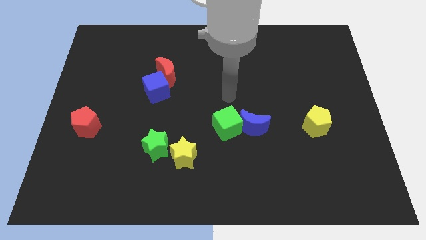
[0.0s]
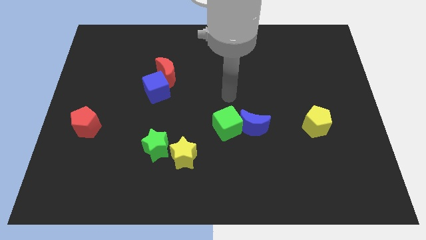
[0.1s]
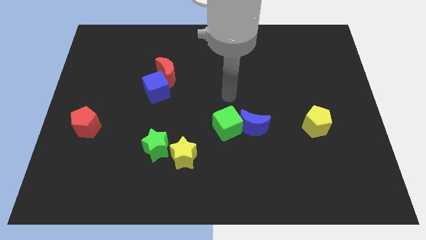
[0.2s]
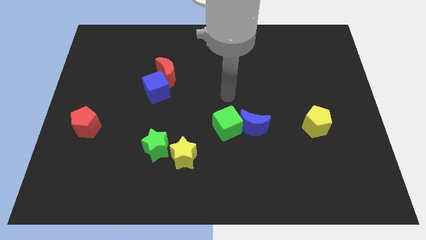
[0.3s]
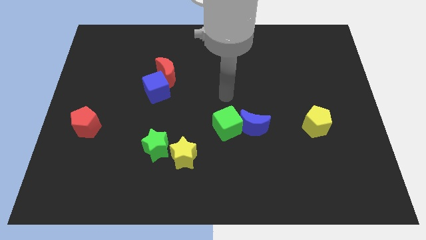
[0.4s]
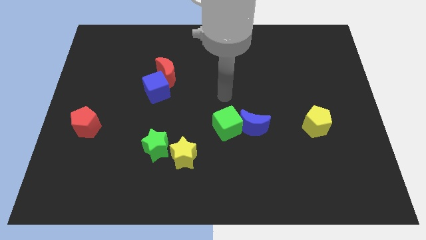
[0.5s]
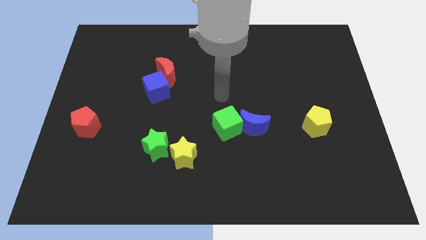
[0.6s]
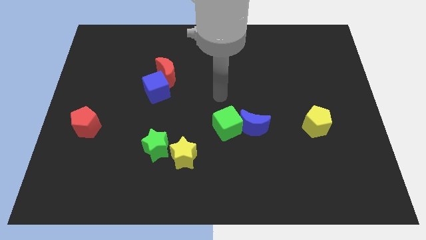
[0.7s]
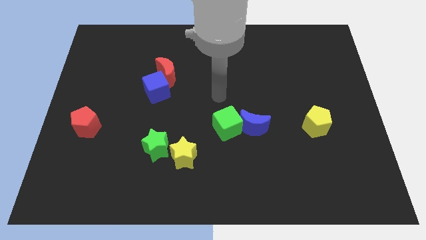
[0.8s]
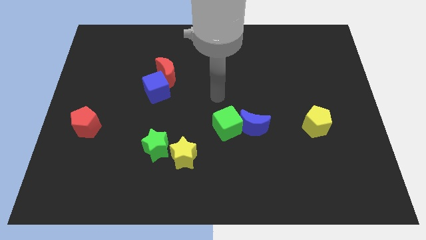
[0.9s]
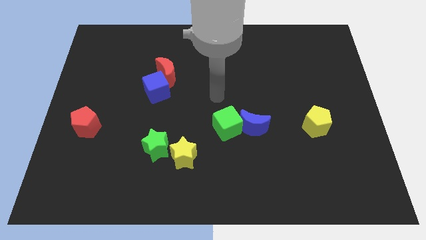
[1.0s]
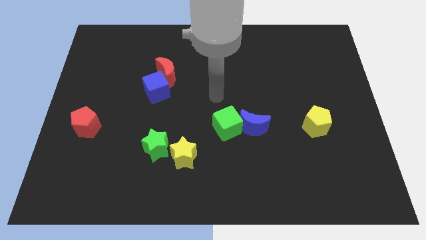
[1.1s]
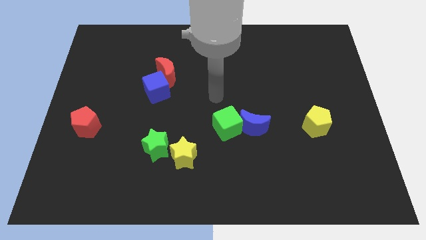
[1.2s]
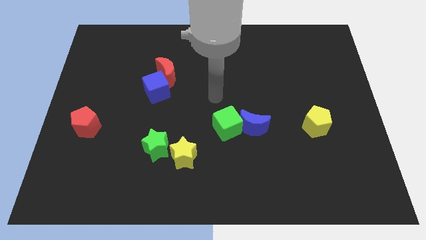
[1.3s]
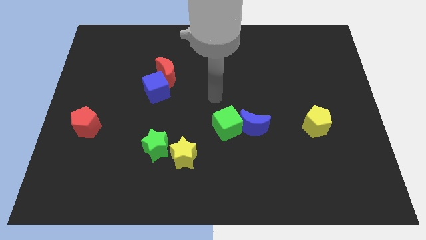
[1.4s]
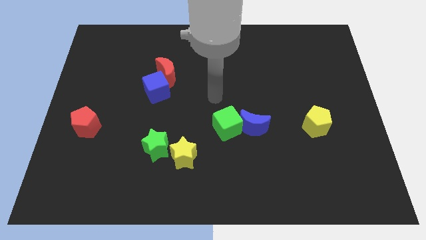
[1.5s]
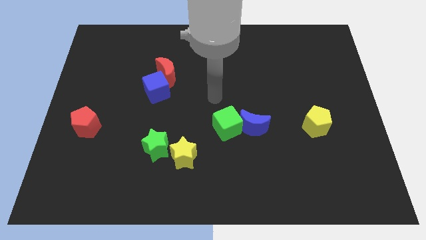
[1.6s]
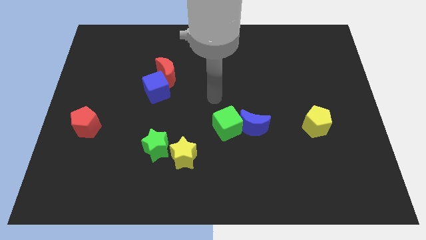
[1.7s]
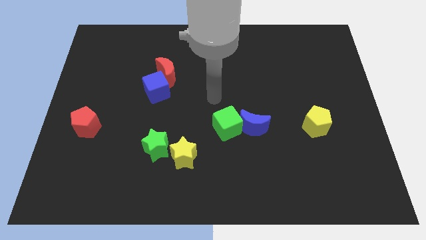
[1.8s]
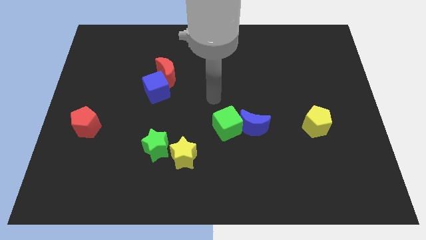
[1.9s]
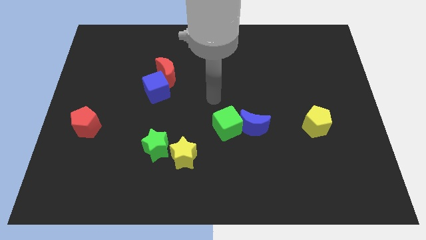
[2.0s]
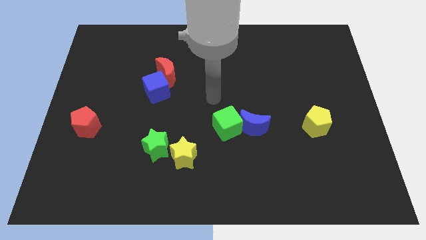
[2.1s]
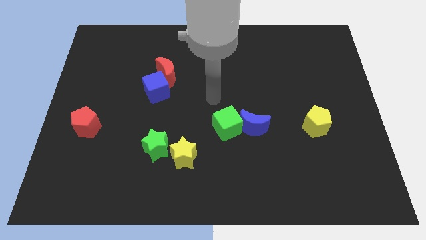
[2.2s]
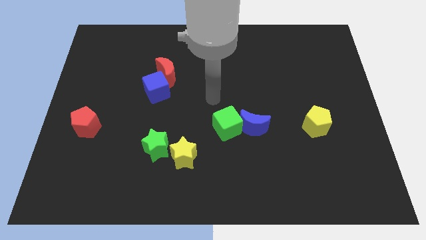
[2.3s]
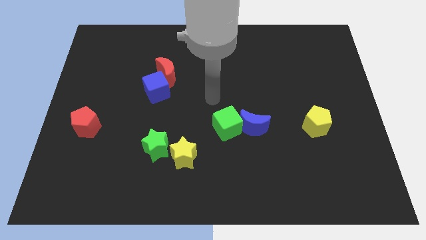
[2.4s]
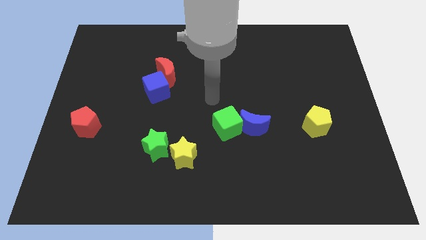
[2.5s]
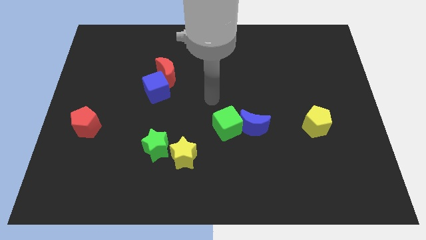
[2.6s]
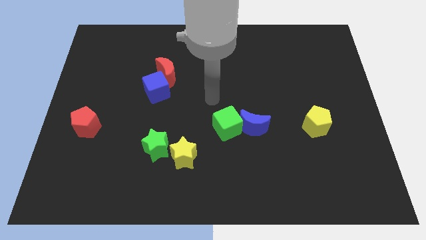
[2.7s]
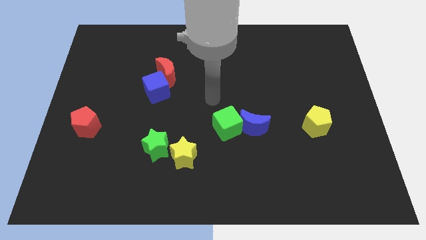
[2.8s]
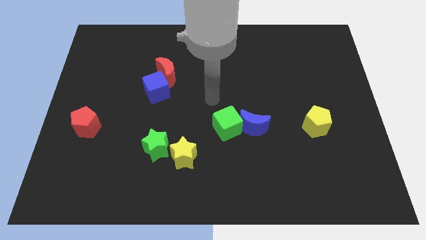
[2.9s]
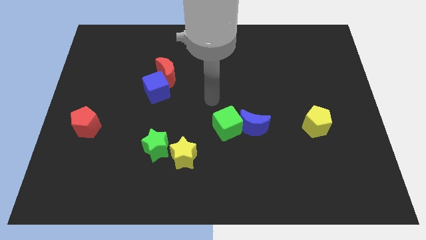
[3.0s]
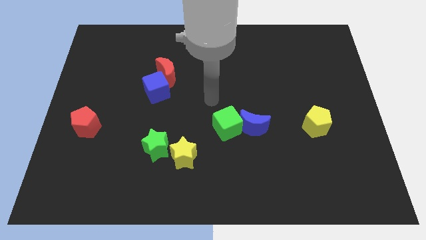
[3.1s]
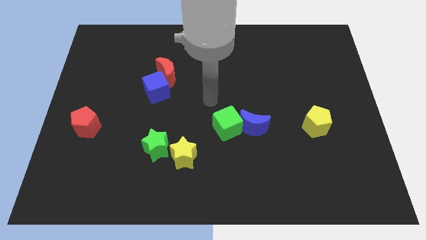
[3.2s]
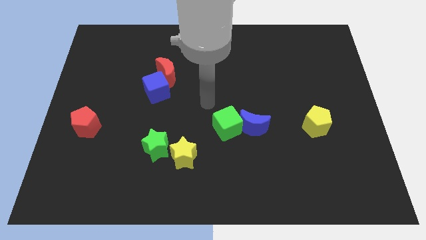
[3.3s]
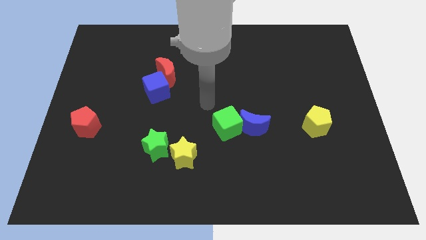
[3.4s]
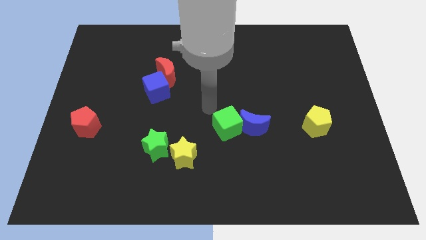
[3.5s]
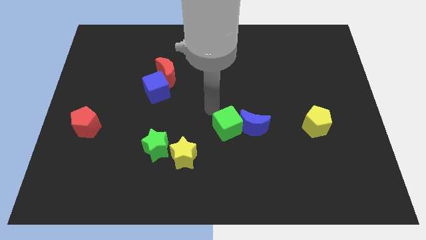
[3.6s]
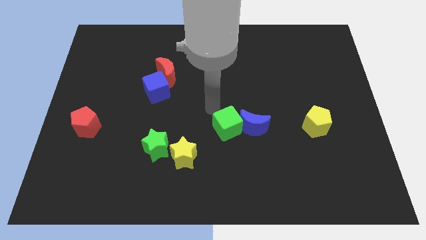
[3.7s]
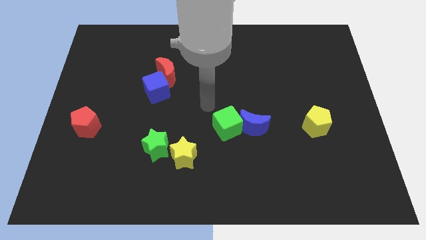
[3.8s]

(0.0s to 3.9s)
move the arm towards the green cube

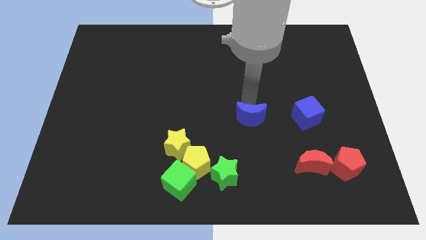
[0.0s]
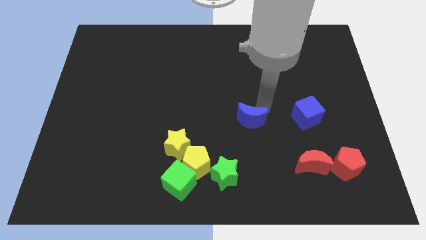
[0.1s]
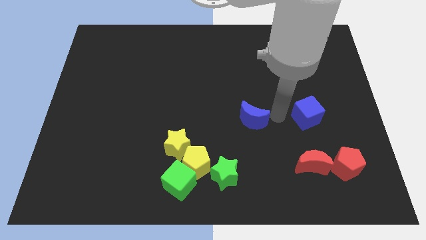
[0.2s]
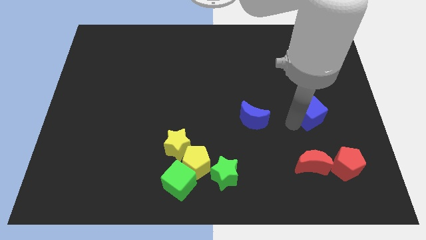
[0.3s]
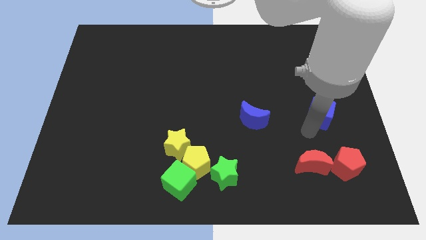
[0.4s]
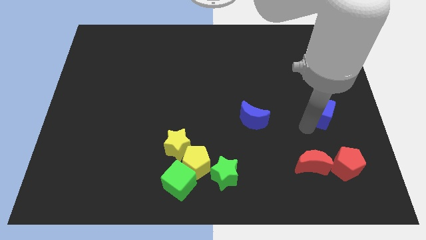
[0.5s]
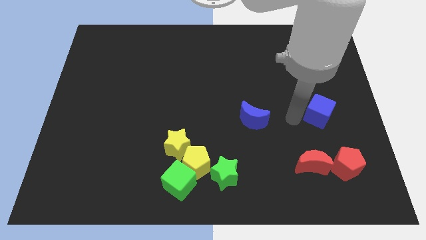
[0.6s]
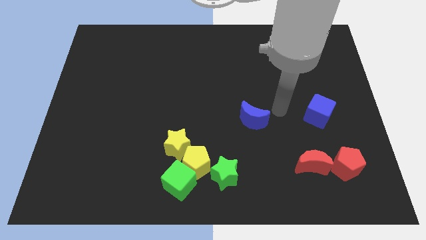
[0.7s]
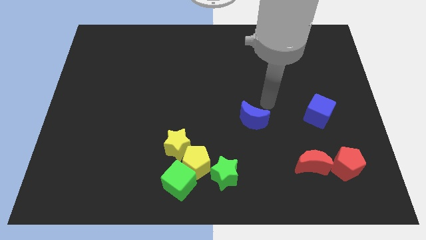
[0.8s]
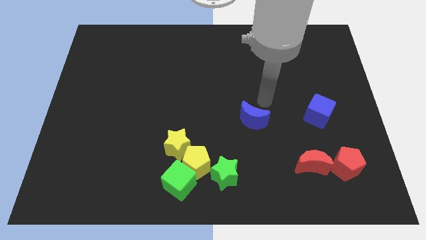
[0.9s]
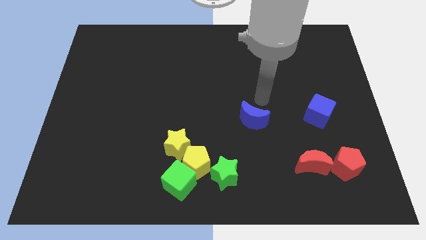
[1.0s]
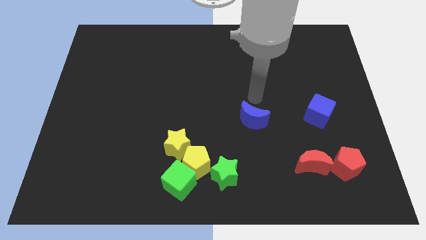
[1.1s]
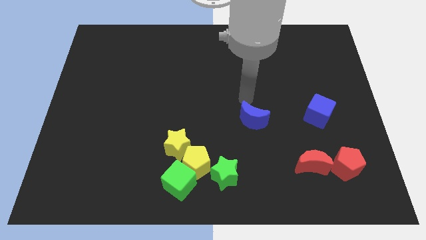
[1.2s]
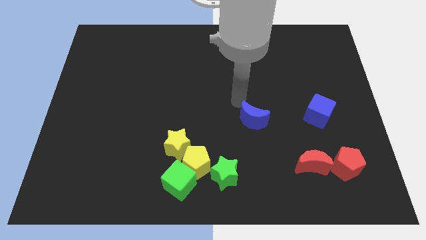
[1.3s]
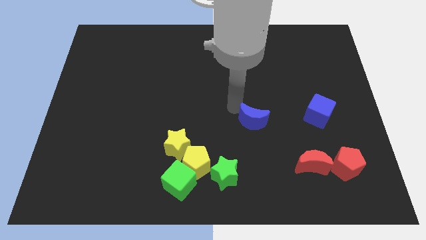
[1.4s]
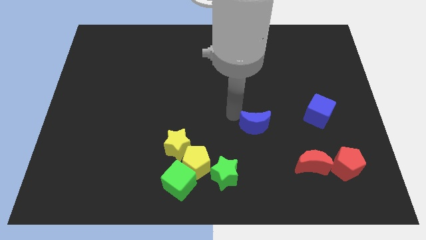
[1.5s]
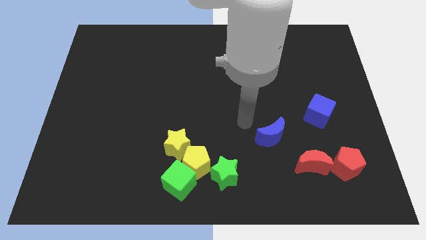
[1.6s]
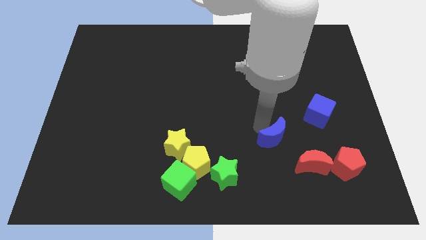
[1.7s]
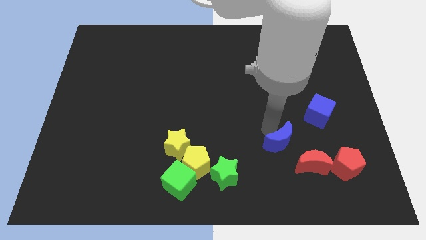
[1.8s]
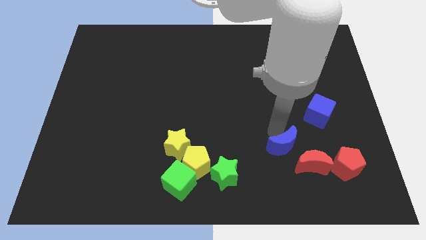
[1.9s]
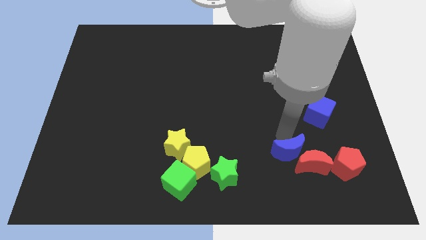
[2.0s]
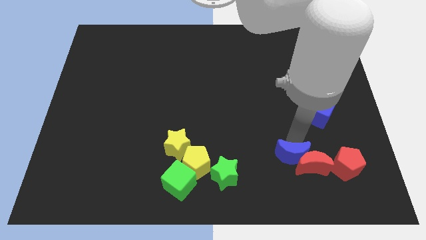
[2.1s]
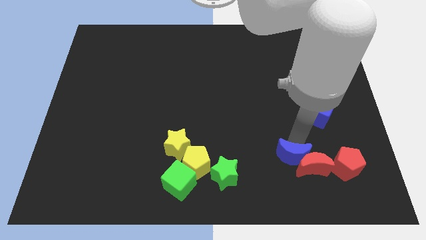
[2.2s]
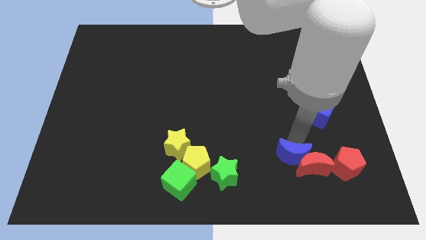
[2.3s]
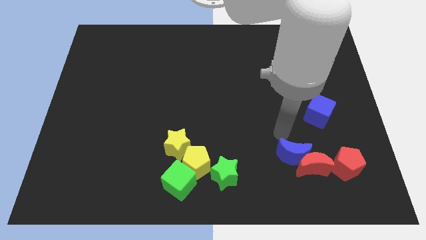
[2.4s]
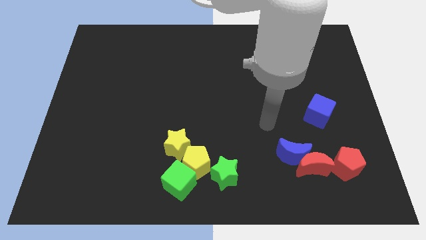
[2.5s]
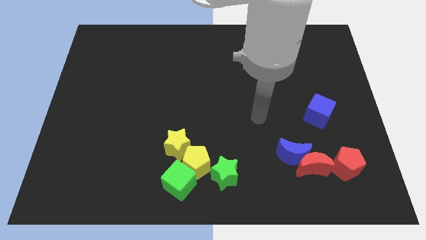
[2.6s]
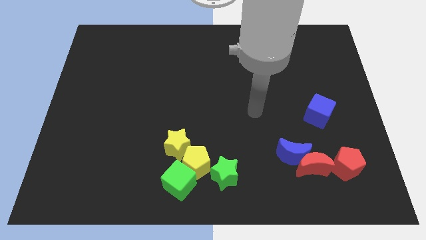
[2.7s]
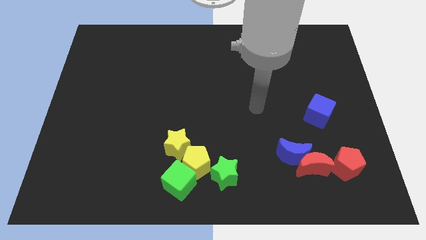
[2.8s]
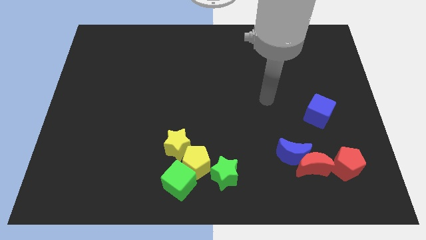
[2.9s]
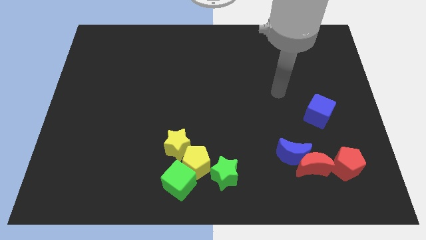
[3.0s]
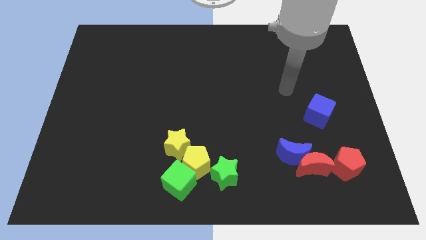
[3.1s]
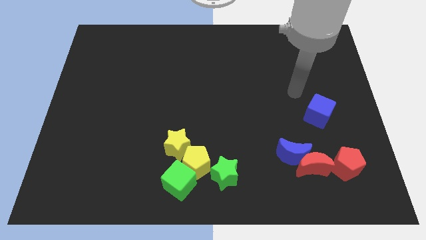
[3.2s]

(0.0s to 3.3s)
place the blue crescent to the top of red crescent

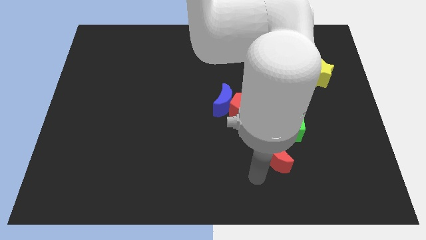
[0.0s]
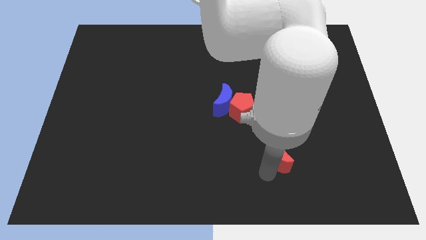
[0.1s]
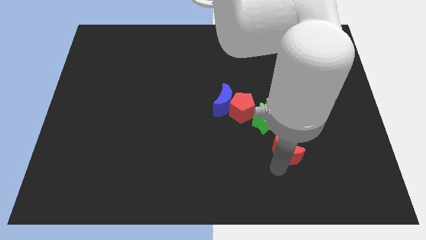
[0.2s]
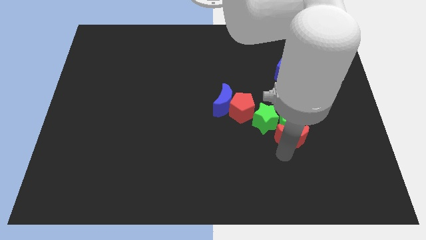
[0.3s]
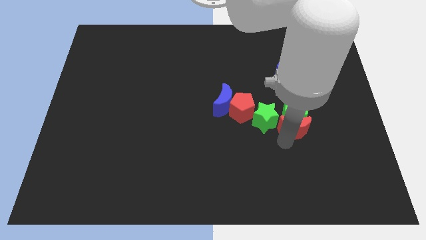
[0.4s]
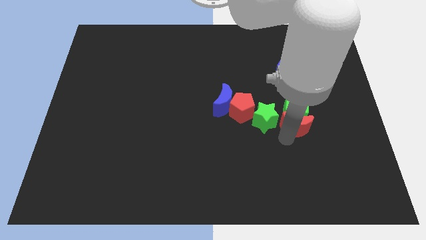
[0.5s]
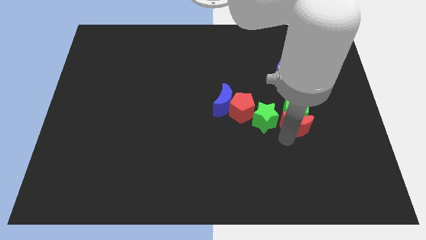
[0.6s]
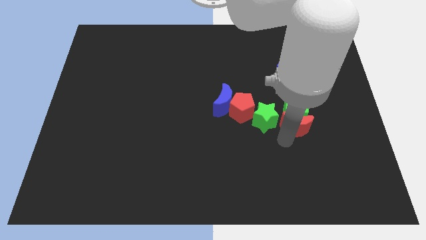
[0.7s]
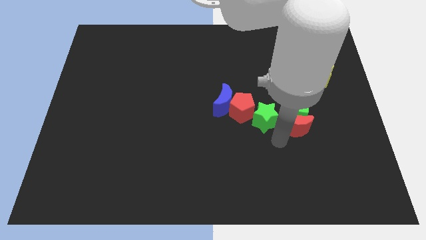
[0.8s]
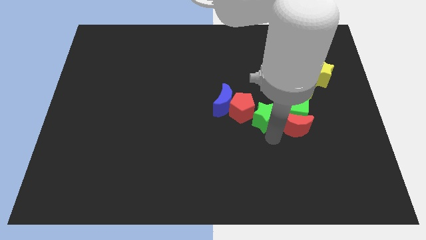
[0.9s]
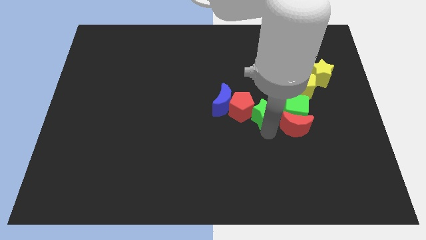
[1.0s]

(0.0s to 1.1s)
move the red crescent into the green cube

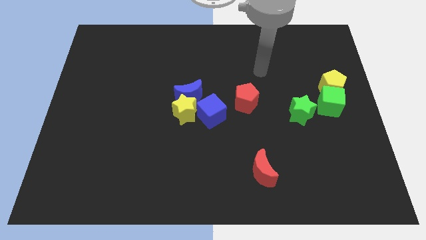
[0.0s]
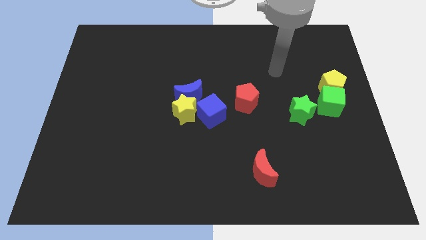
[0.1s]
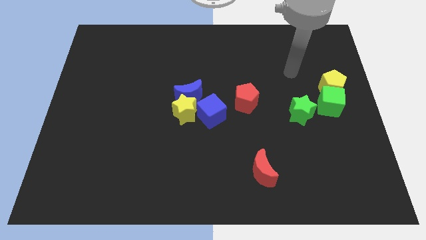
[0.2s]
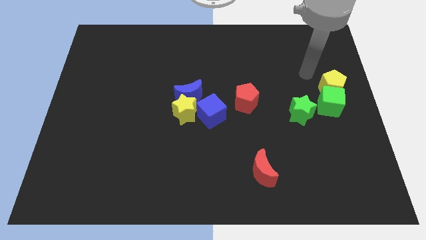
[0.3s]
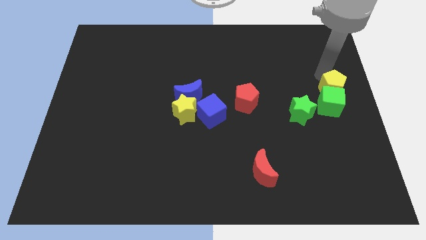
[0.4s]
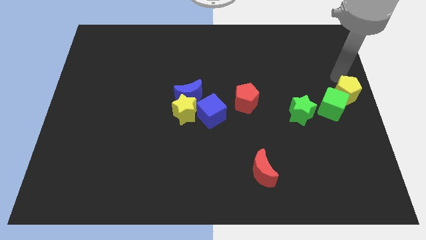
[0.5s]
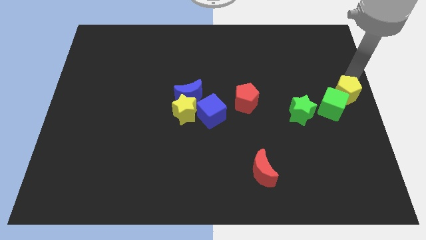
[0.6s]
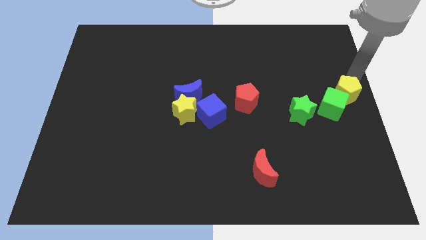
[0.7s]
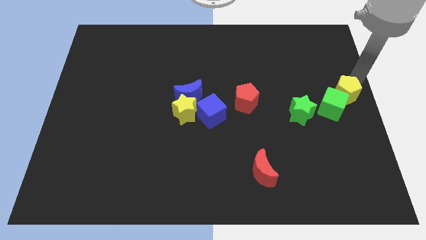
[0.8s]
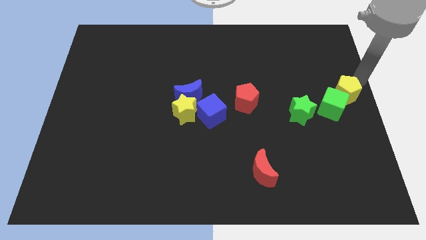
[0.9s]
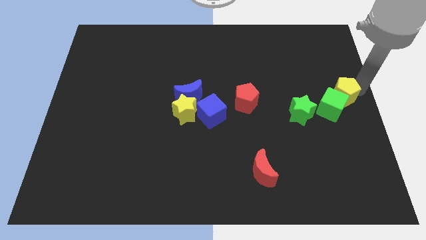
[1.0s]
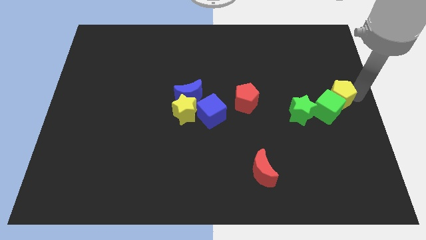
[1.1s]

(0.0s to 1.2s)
push the green cube with yellow pentagon
